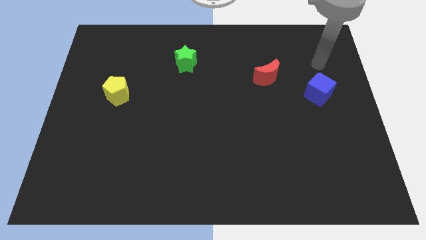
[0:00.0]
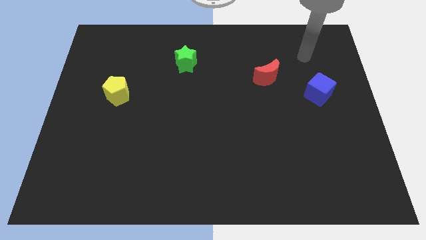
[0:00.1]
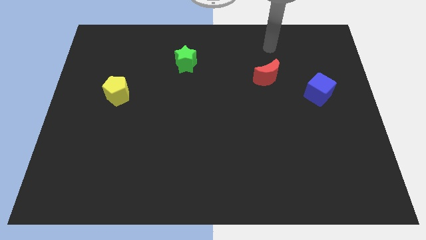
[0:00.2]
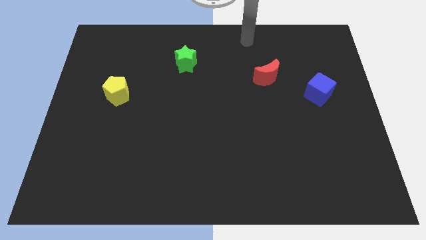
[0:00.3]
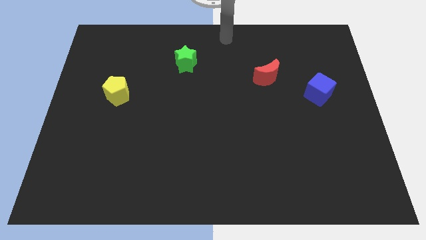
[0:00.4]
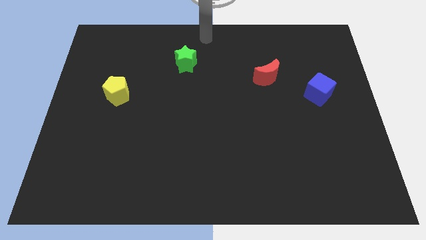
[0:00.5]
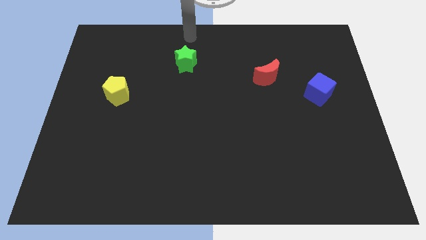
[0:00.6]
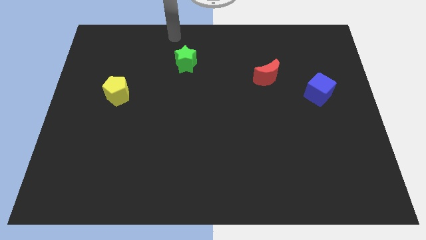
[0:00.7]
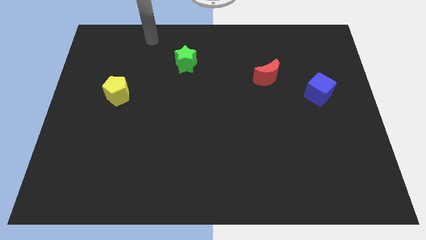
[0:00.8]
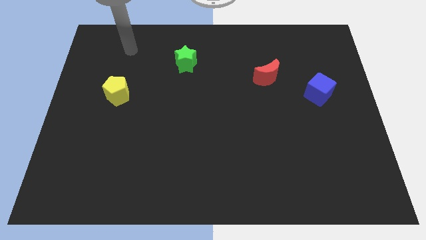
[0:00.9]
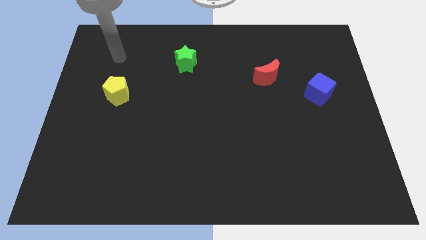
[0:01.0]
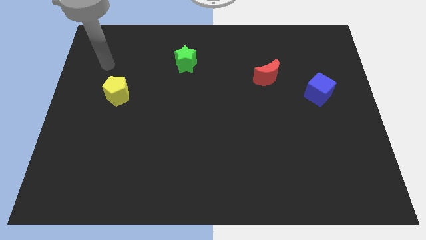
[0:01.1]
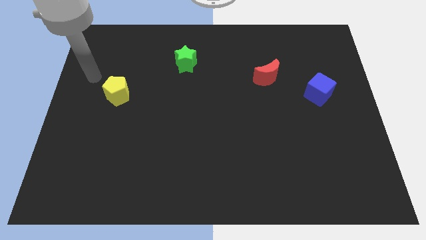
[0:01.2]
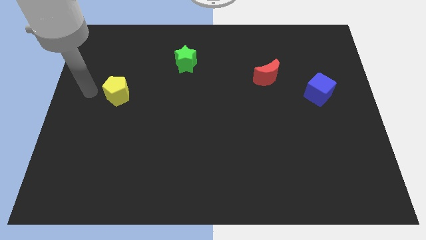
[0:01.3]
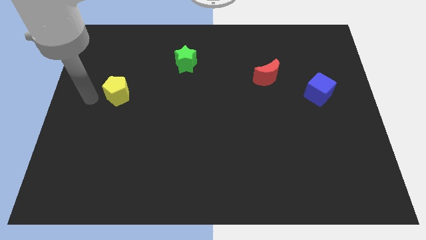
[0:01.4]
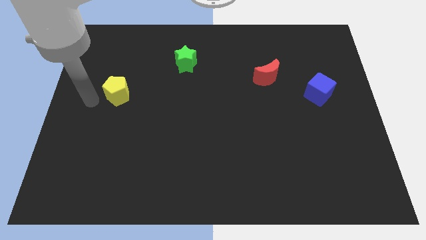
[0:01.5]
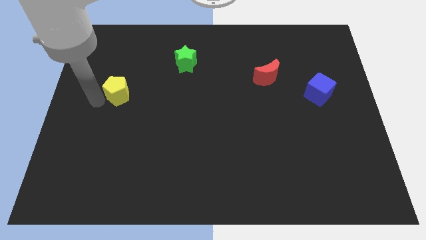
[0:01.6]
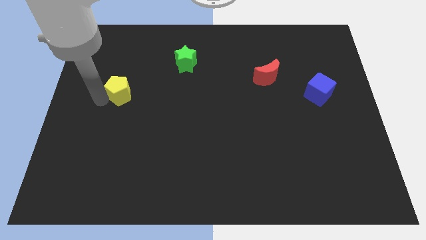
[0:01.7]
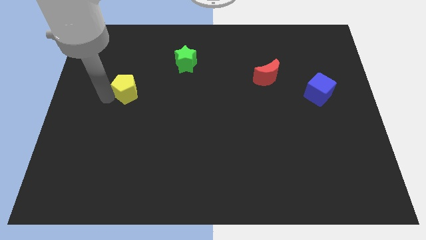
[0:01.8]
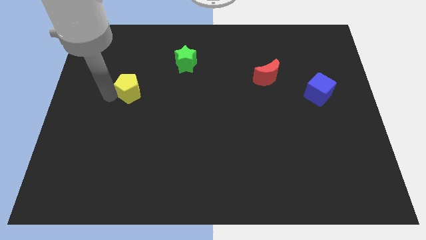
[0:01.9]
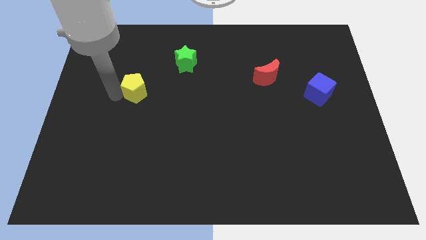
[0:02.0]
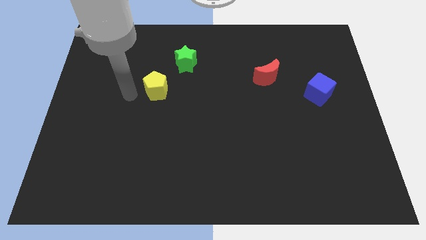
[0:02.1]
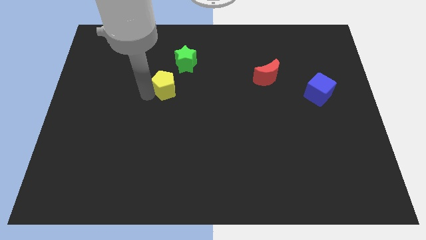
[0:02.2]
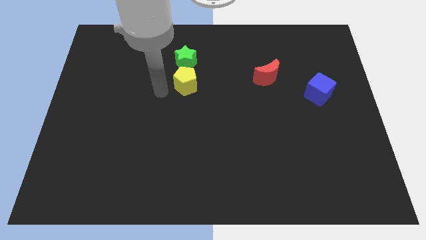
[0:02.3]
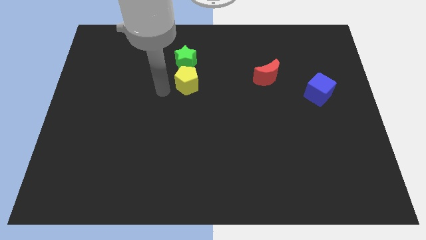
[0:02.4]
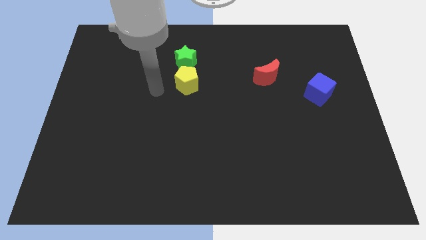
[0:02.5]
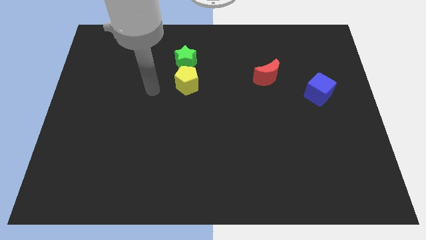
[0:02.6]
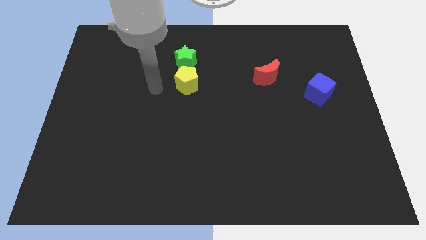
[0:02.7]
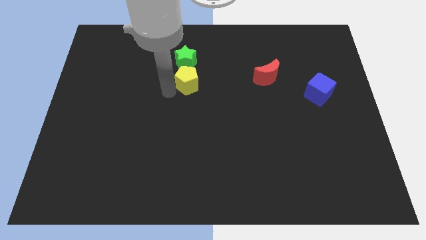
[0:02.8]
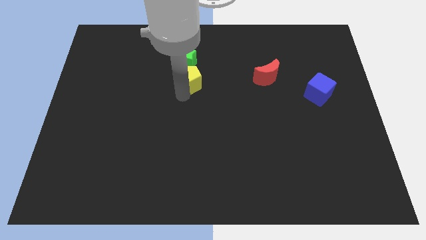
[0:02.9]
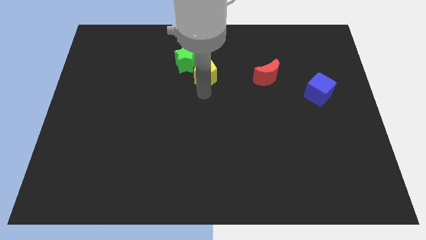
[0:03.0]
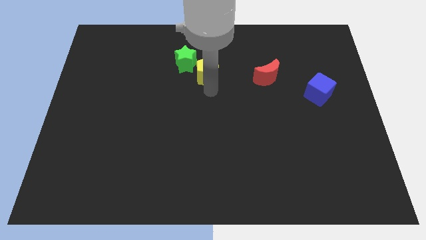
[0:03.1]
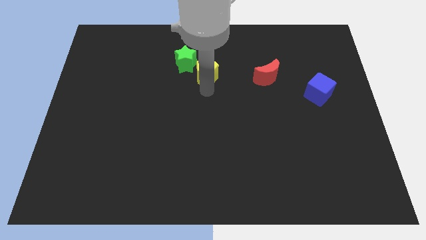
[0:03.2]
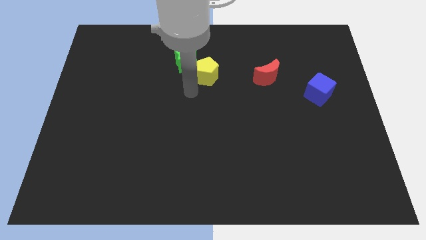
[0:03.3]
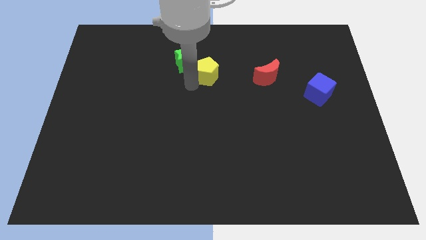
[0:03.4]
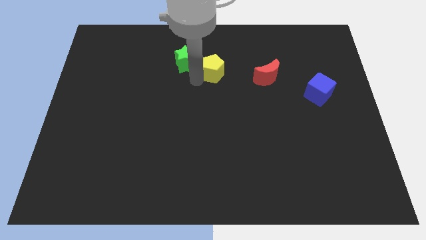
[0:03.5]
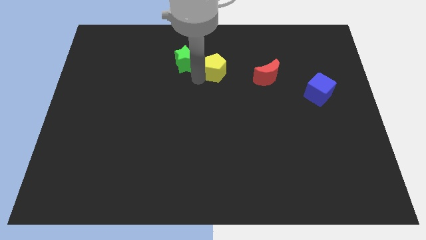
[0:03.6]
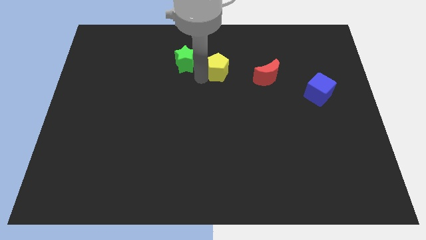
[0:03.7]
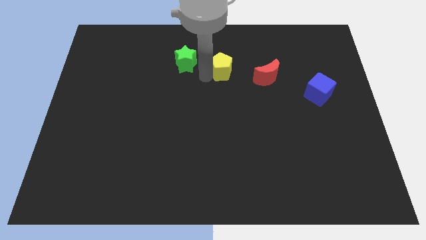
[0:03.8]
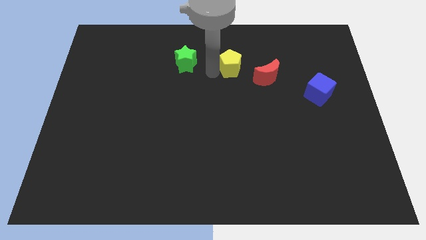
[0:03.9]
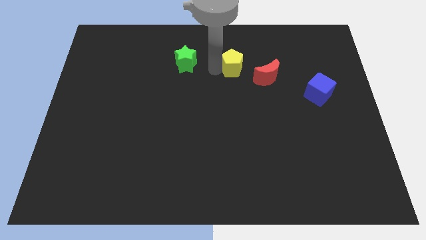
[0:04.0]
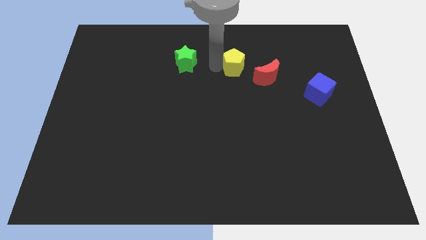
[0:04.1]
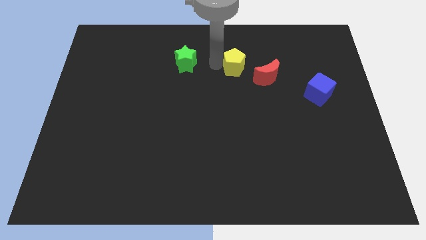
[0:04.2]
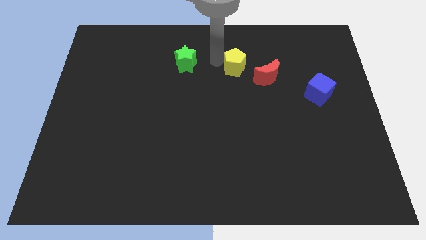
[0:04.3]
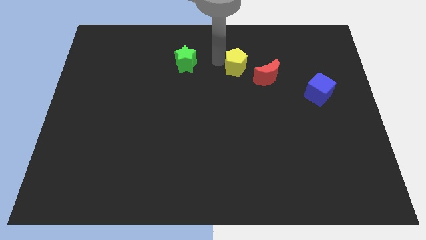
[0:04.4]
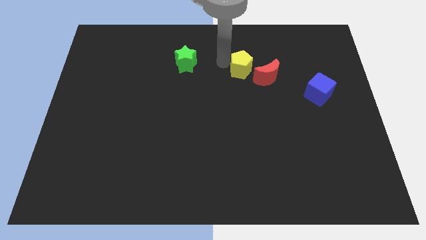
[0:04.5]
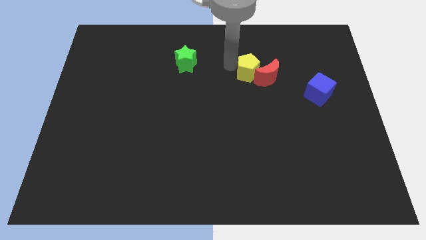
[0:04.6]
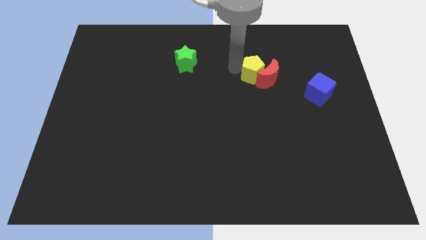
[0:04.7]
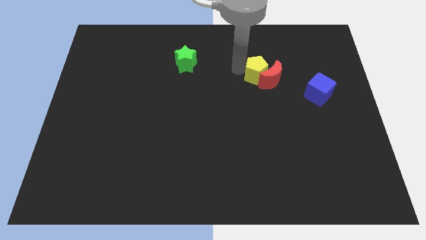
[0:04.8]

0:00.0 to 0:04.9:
push the yellow block close to the red block

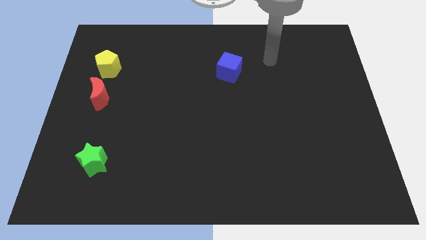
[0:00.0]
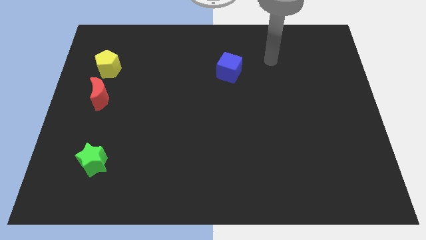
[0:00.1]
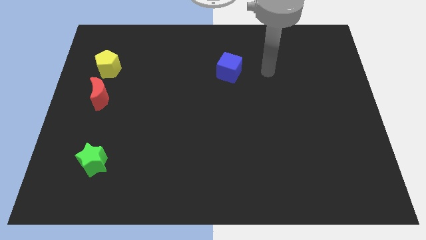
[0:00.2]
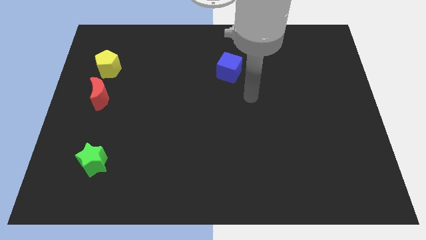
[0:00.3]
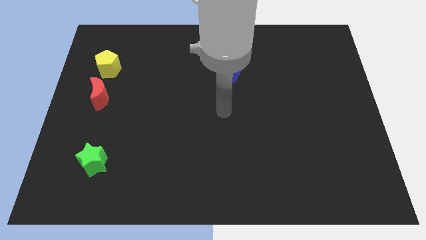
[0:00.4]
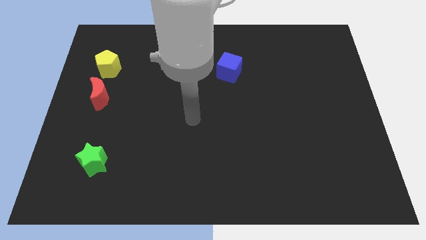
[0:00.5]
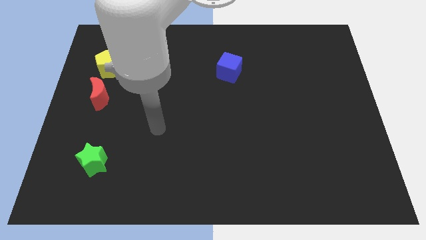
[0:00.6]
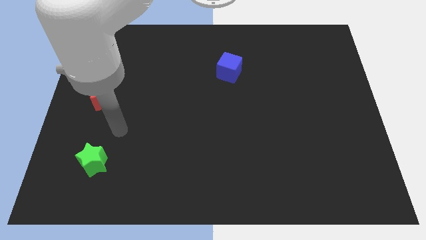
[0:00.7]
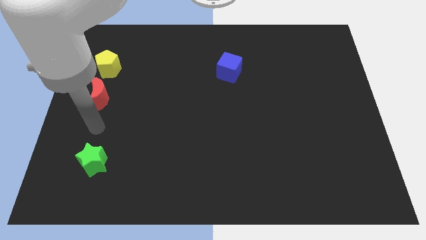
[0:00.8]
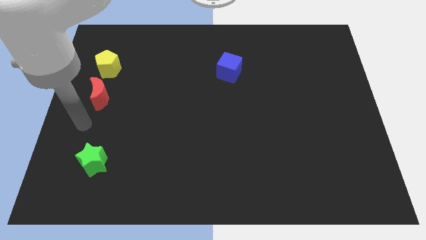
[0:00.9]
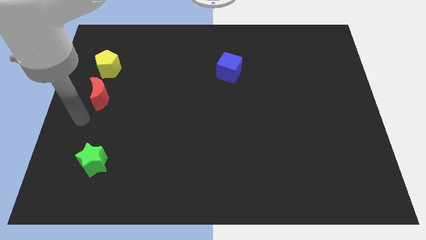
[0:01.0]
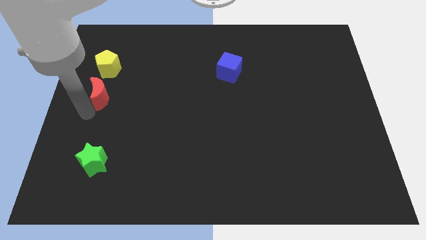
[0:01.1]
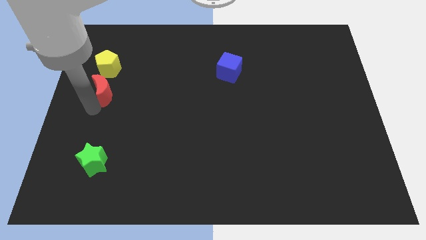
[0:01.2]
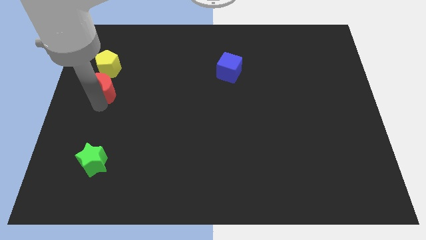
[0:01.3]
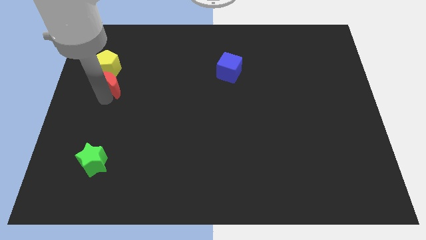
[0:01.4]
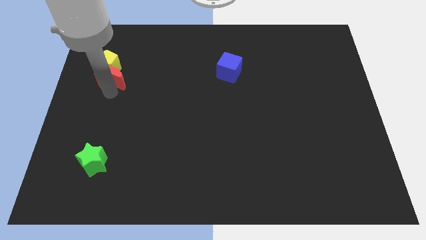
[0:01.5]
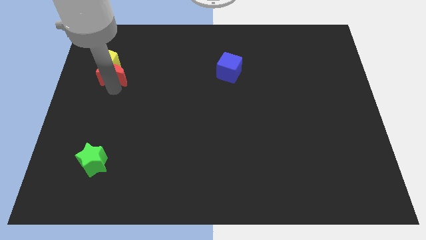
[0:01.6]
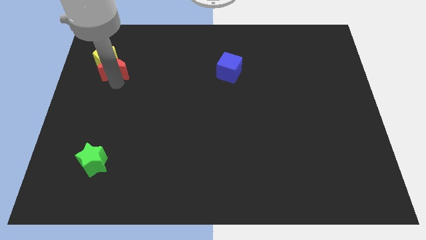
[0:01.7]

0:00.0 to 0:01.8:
slide the moon to the pentagon

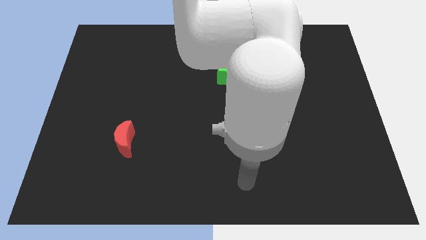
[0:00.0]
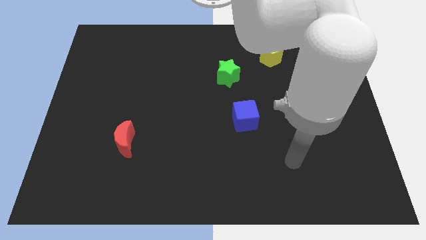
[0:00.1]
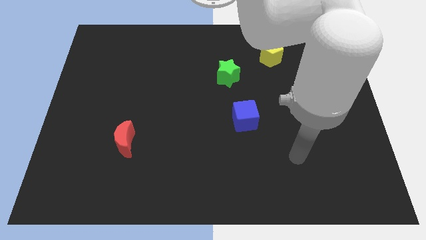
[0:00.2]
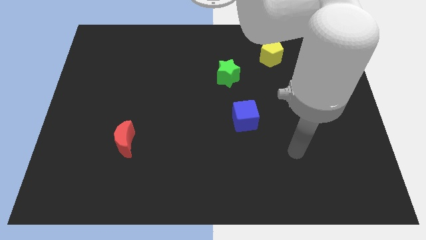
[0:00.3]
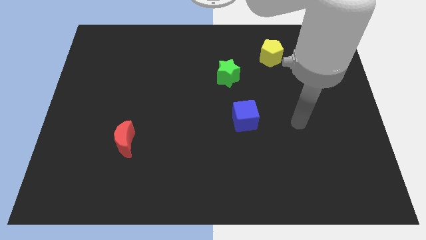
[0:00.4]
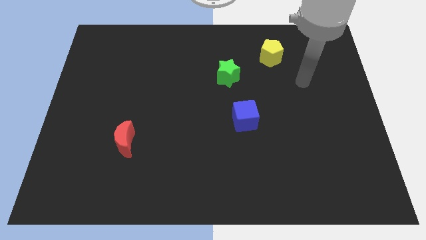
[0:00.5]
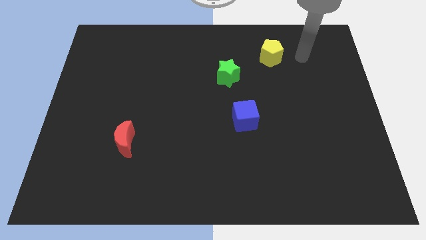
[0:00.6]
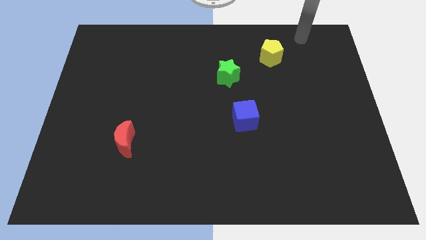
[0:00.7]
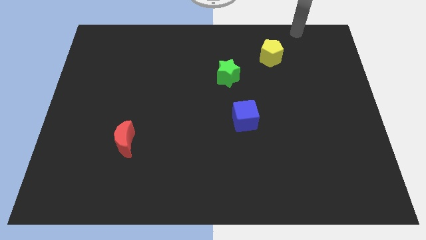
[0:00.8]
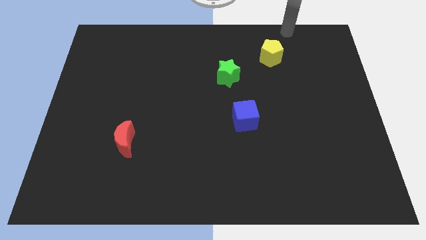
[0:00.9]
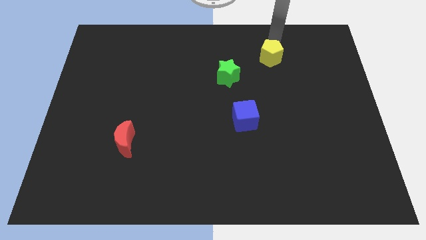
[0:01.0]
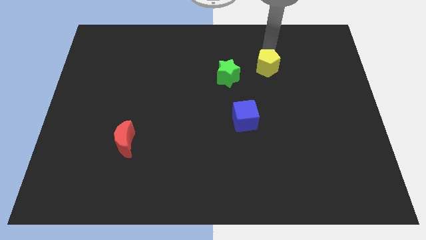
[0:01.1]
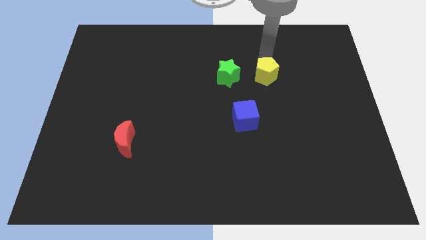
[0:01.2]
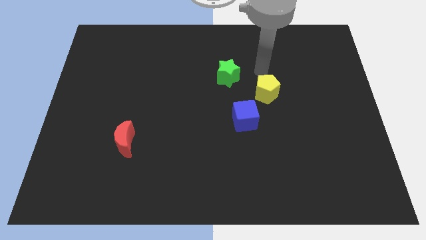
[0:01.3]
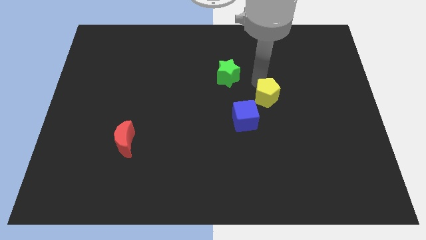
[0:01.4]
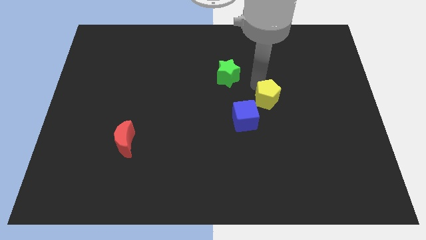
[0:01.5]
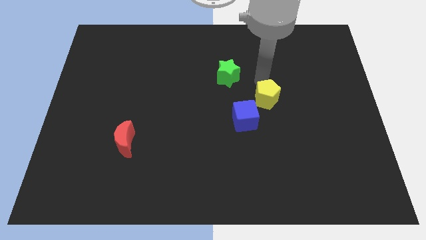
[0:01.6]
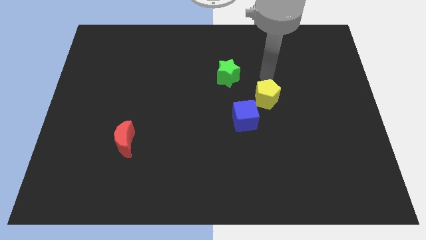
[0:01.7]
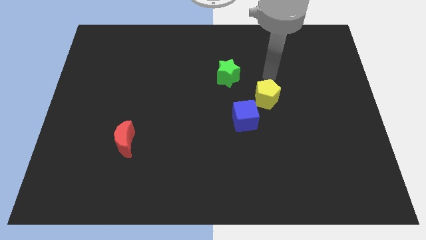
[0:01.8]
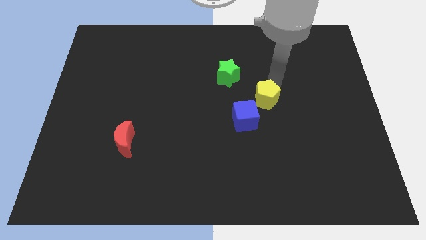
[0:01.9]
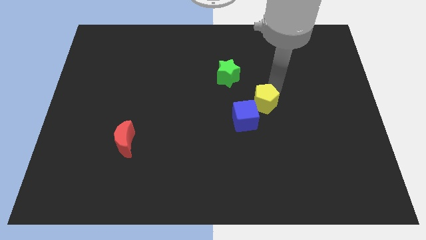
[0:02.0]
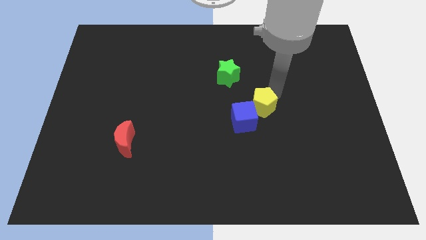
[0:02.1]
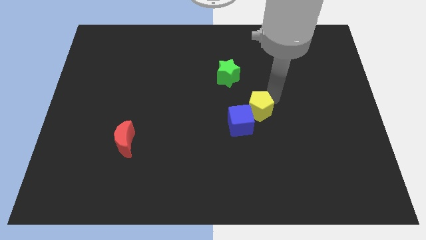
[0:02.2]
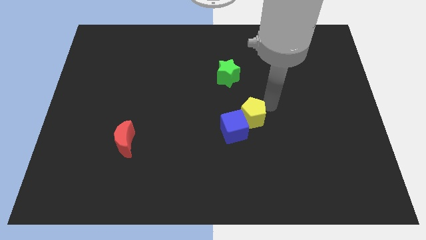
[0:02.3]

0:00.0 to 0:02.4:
slide the yellow pentagon towards the blue cube
